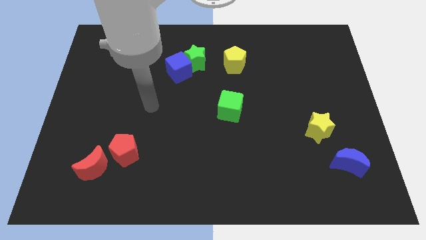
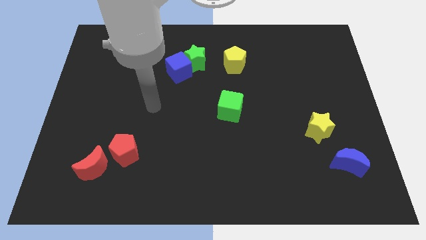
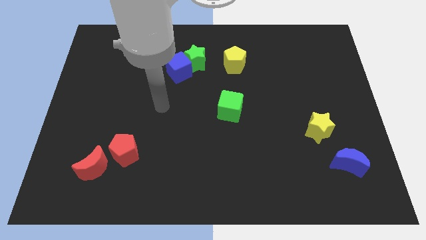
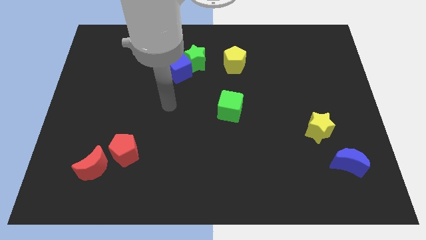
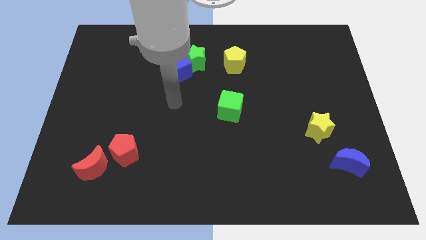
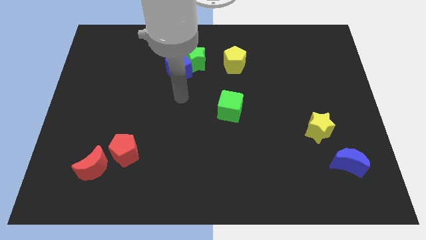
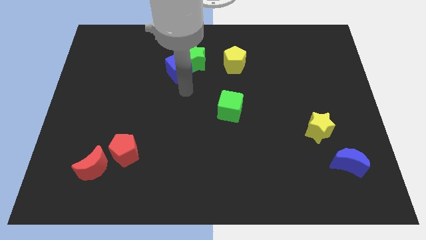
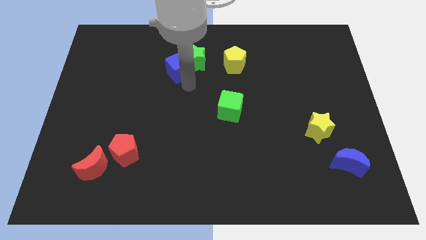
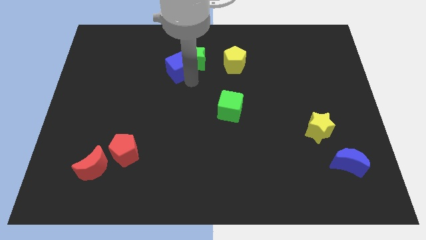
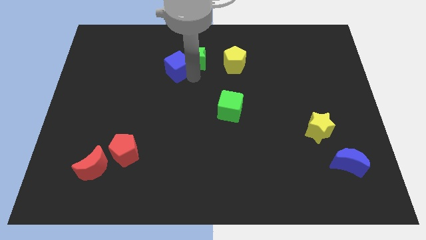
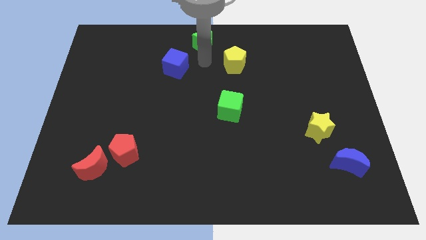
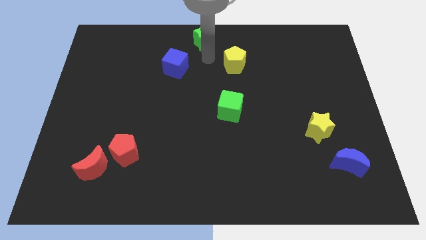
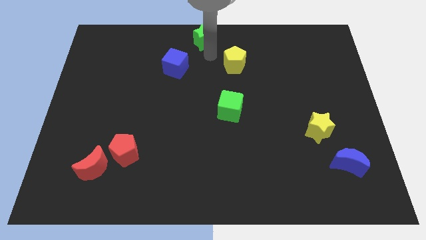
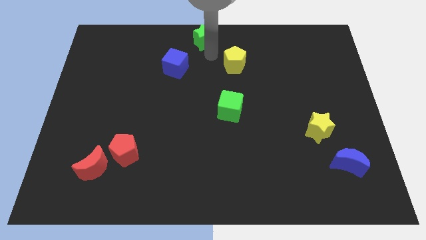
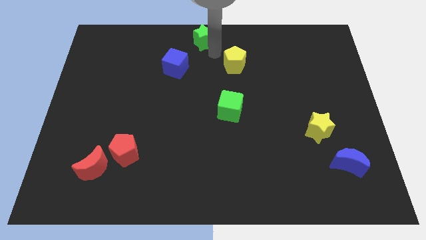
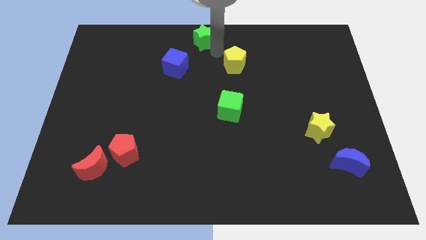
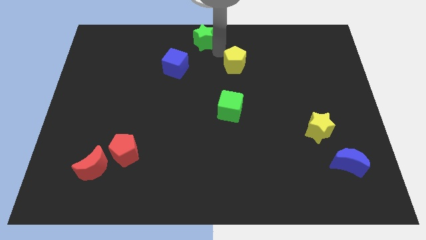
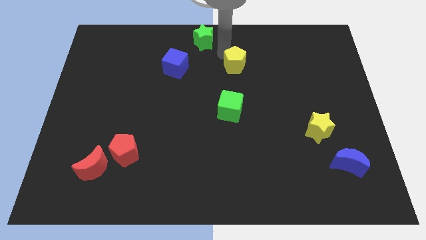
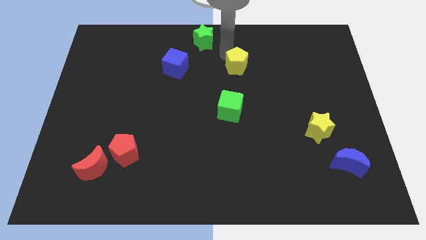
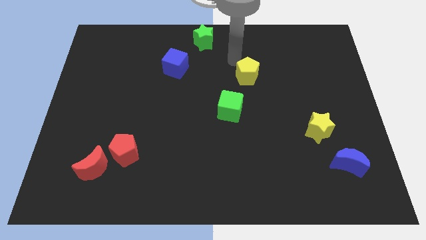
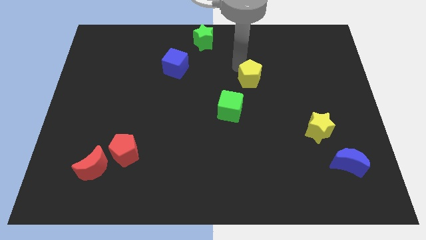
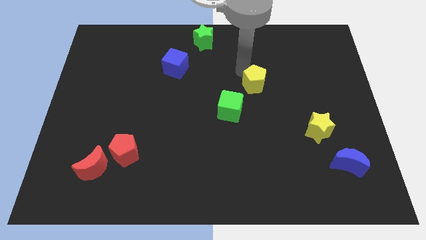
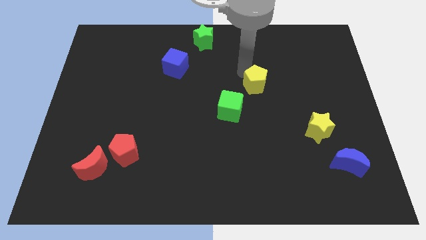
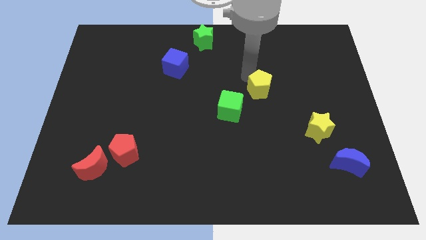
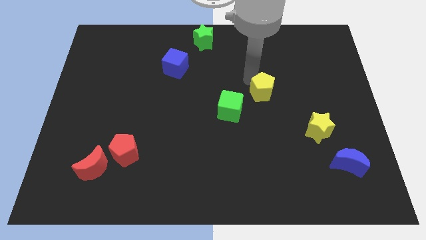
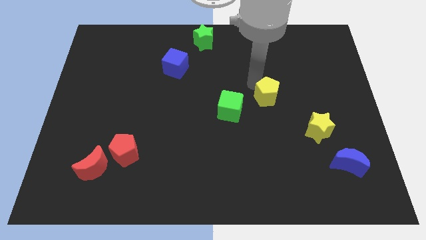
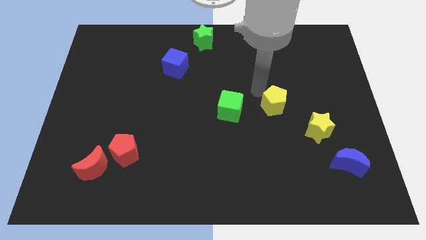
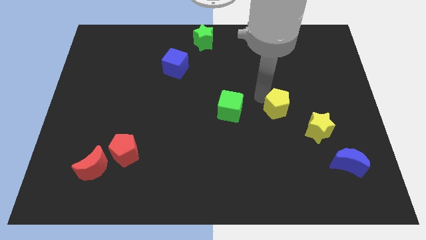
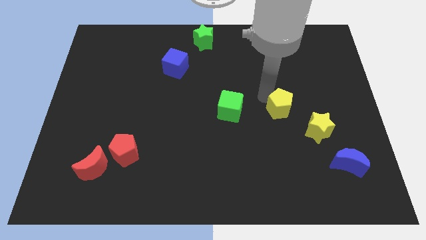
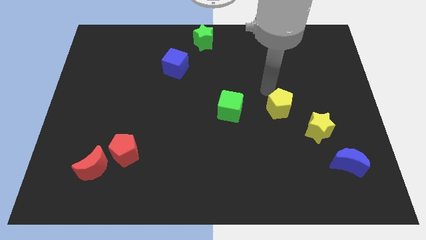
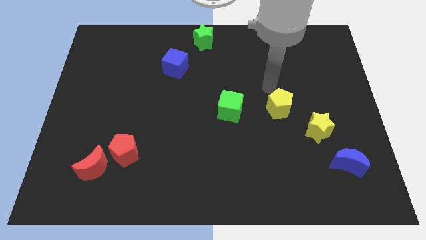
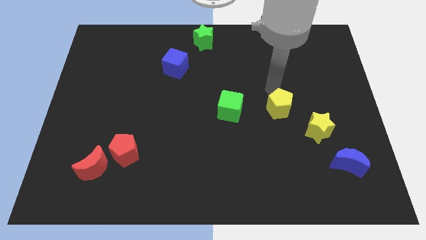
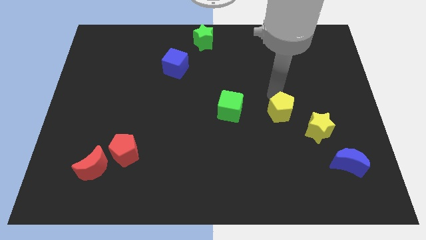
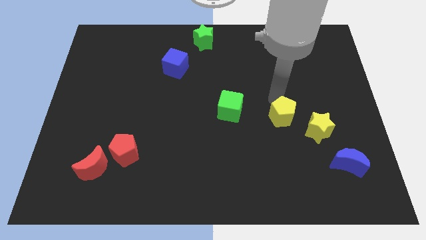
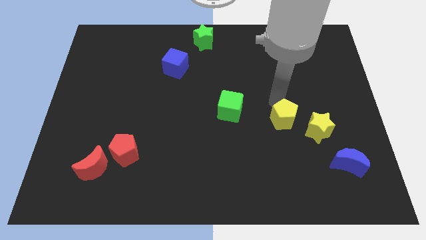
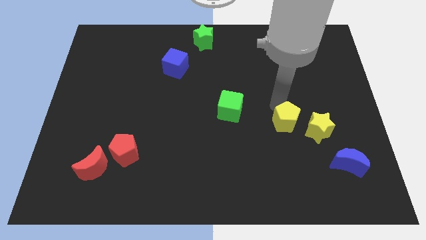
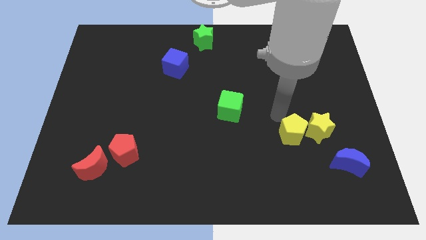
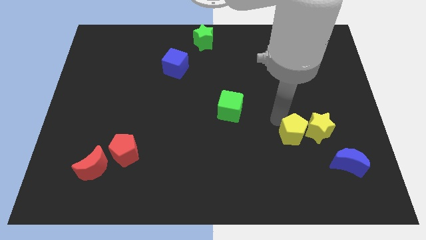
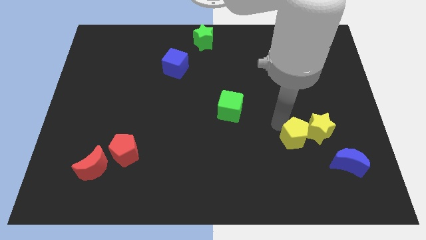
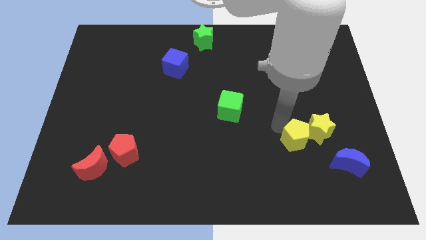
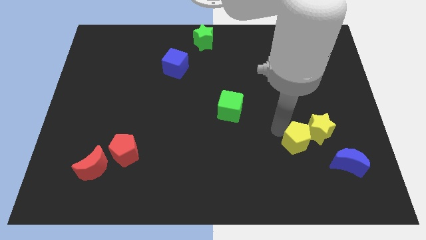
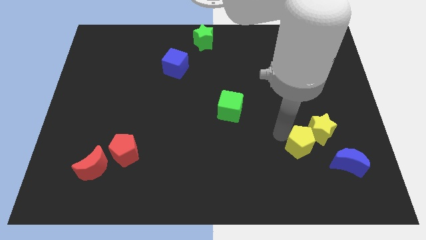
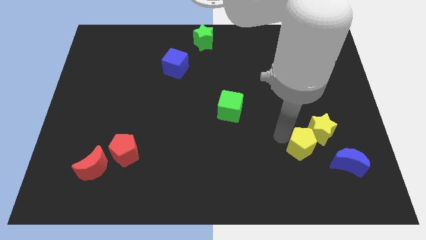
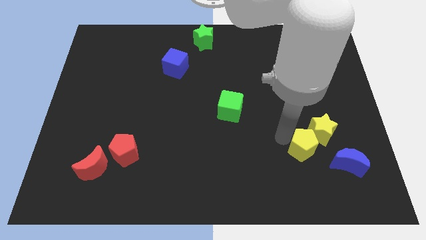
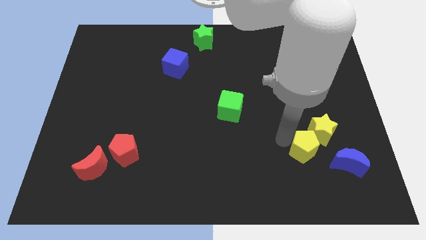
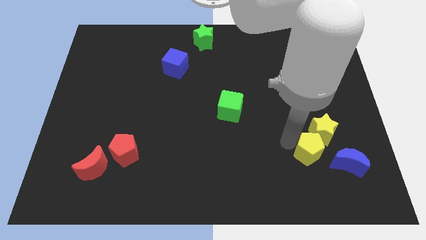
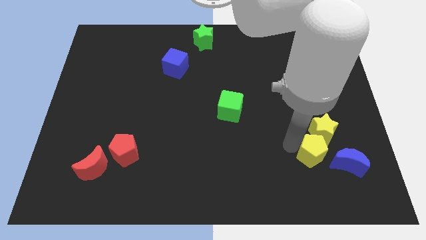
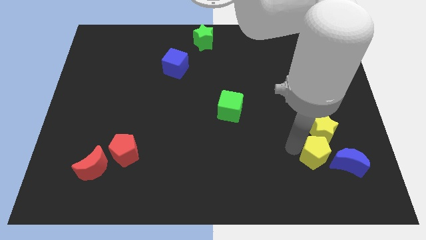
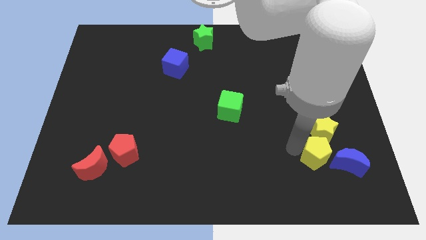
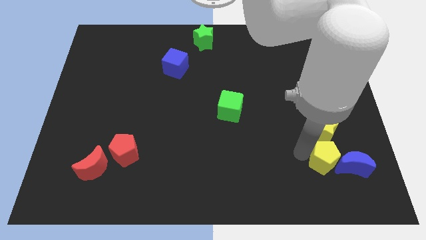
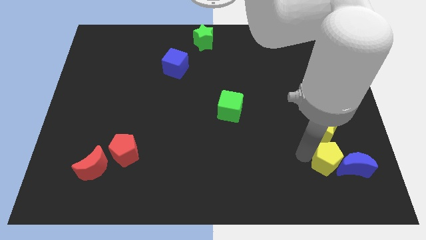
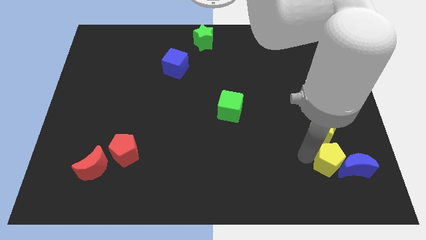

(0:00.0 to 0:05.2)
move the yellow pentagon next to the blue moon

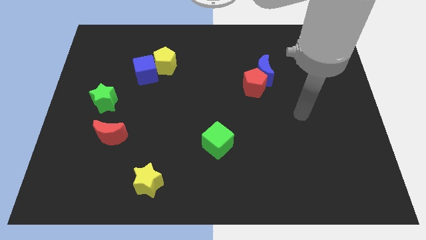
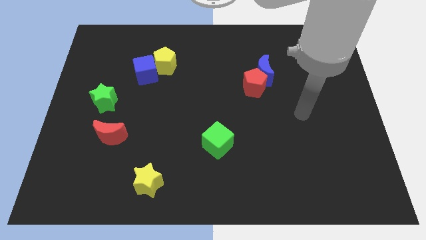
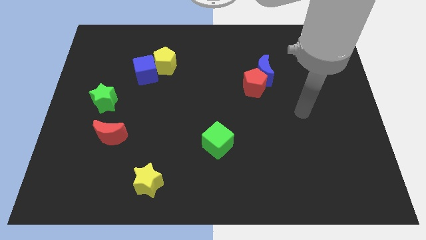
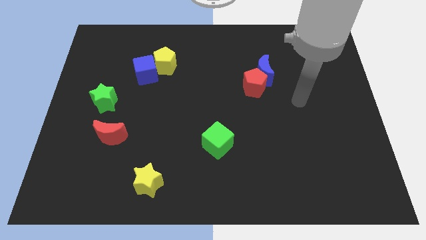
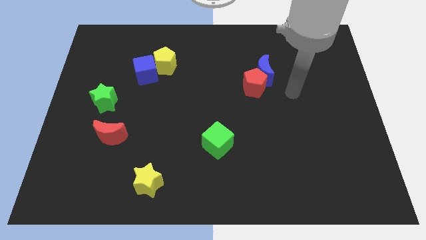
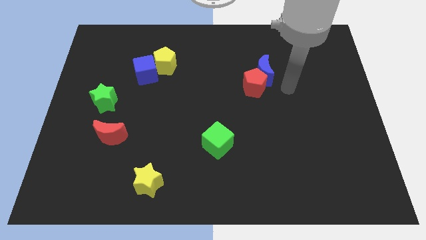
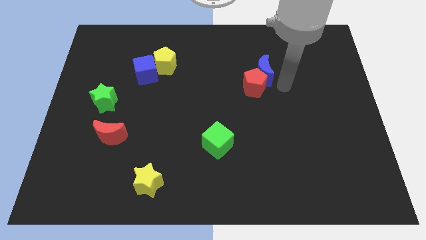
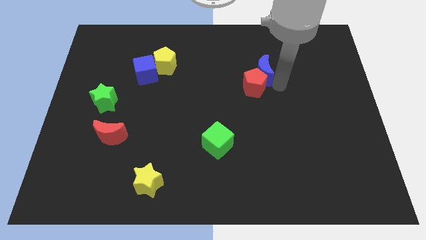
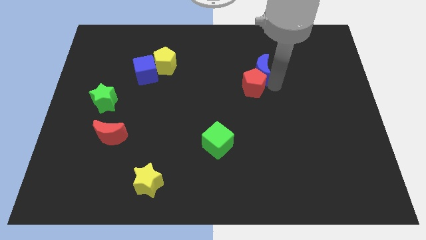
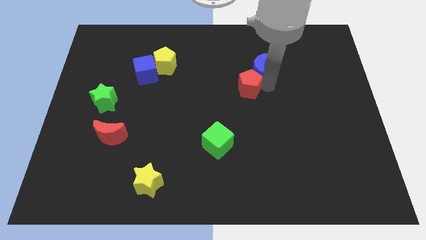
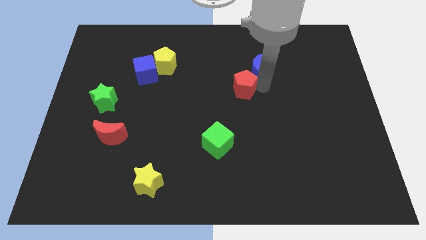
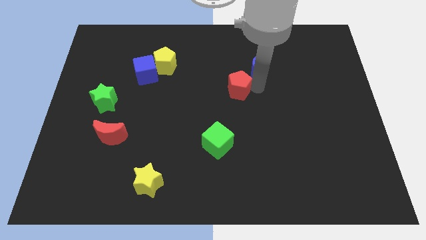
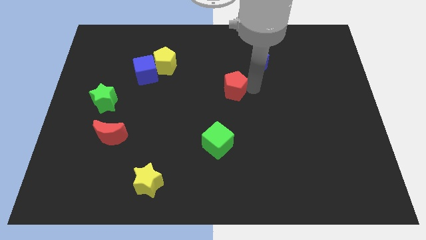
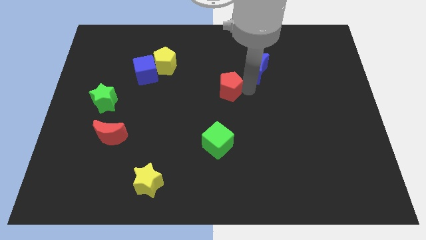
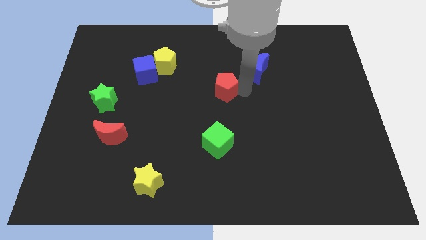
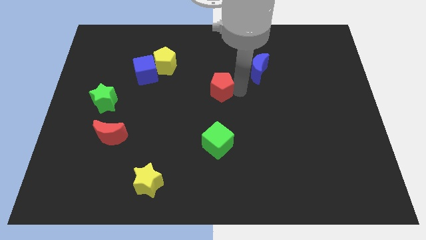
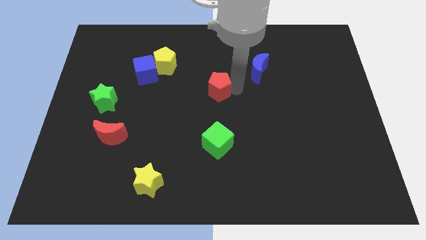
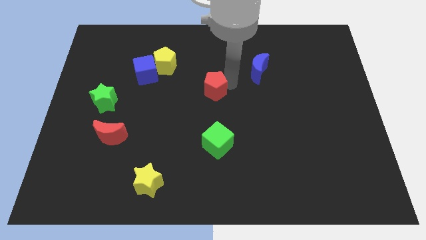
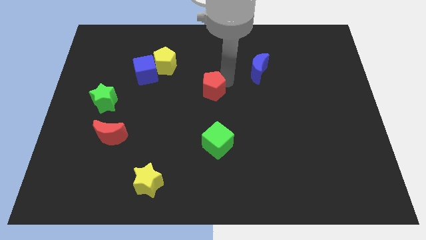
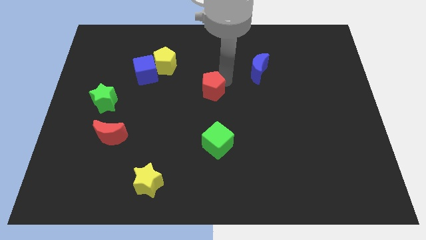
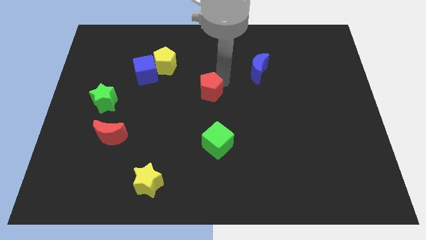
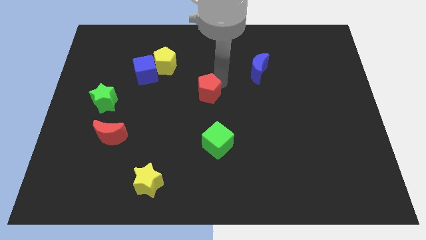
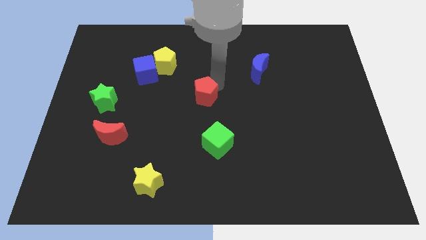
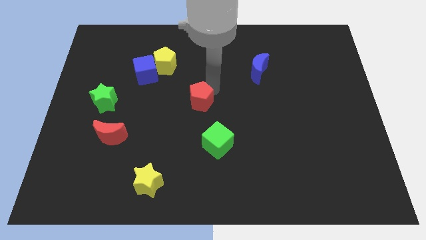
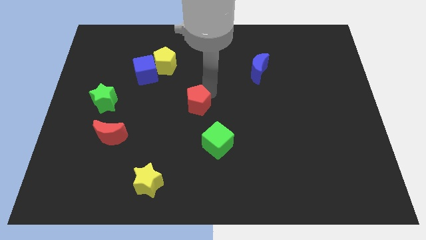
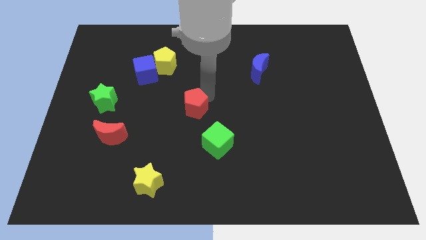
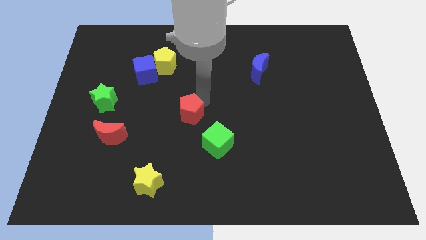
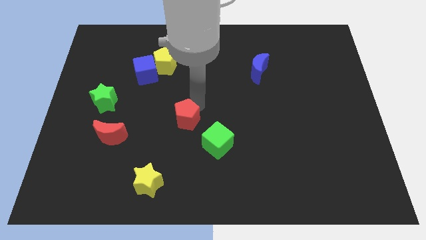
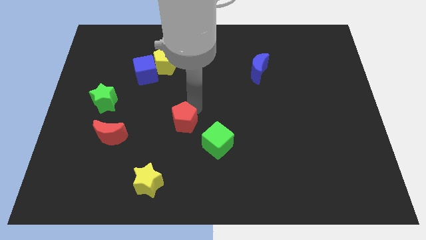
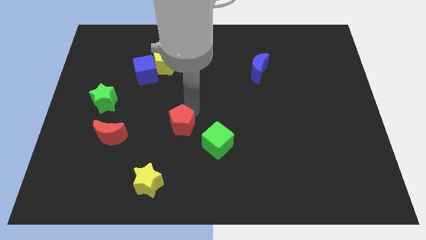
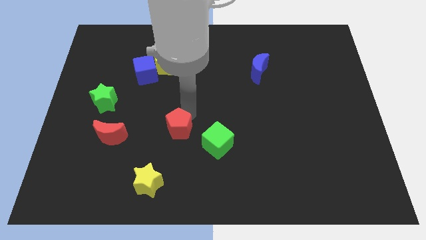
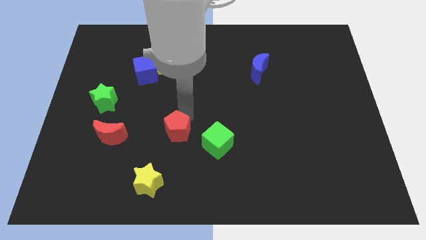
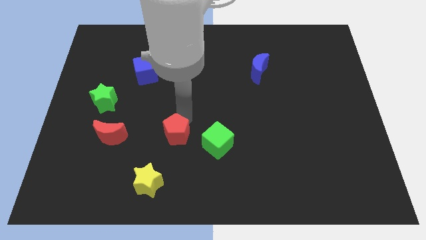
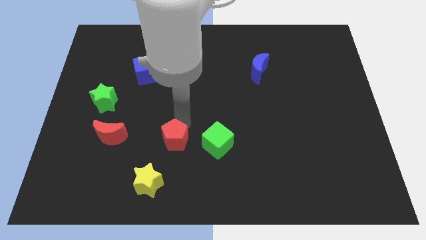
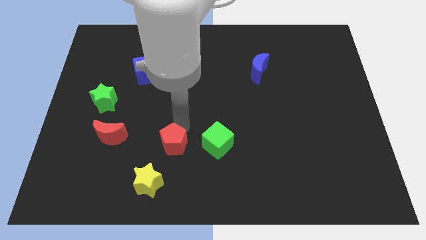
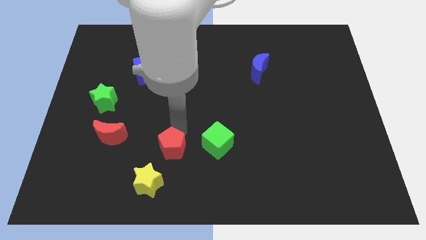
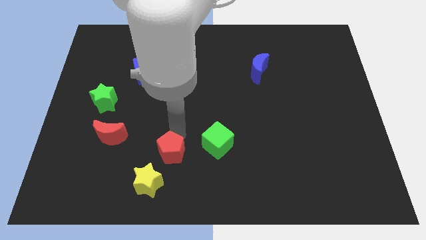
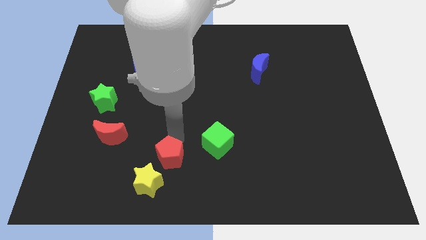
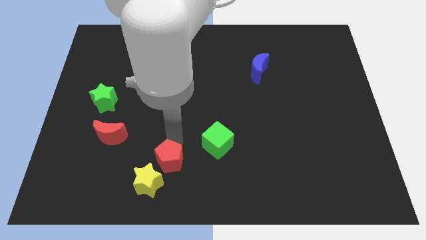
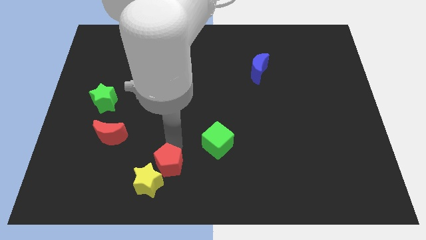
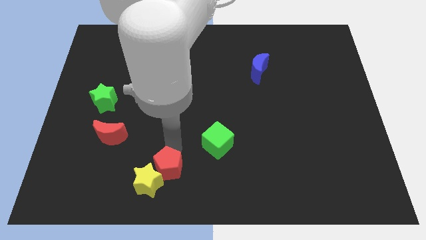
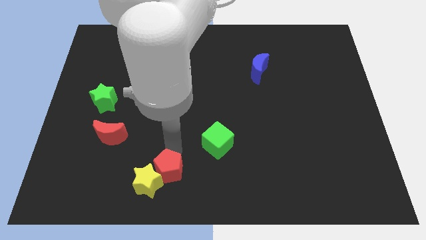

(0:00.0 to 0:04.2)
move the red pentagon close to the yellow star
